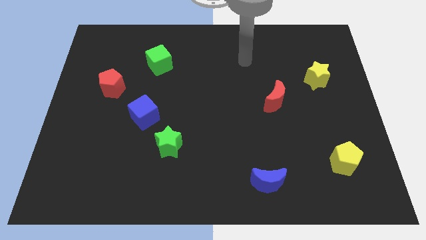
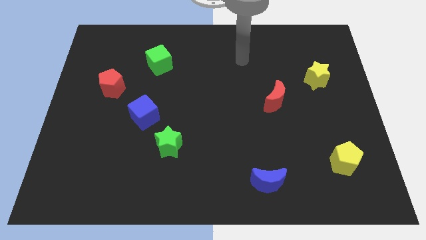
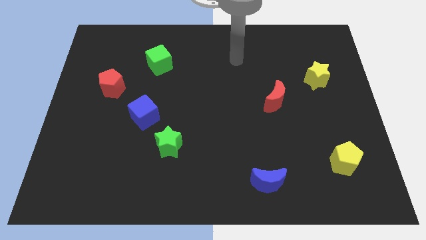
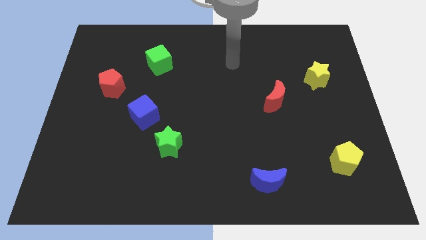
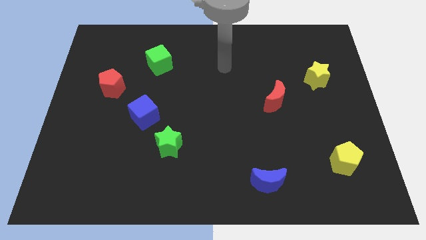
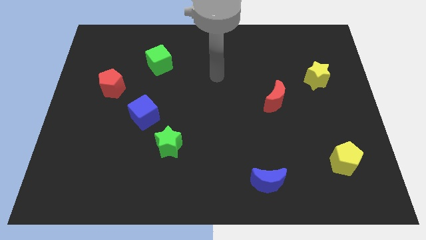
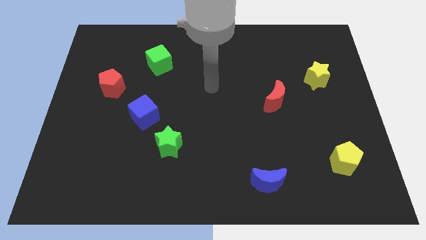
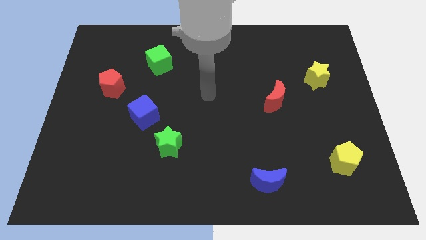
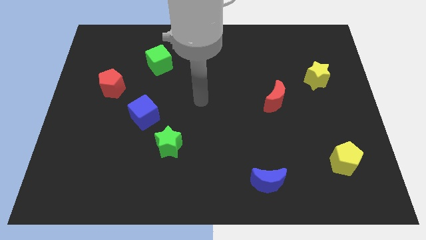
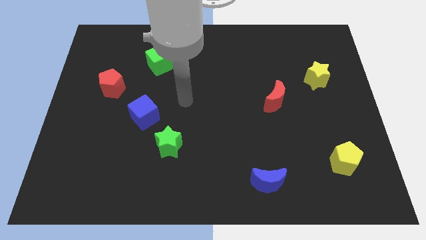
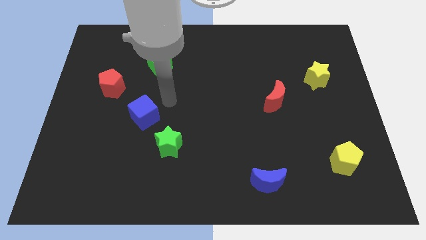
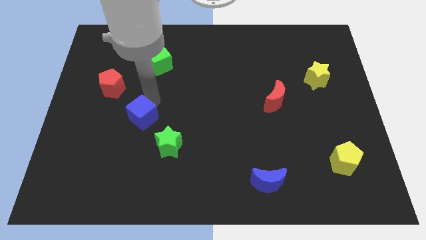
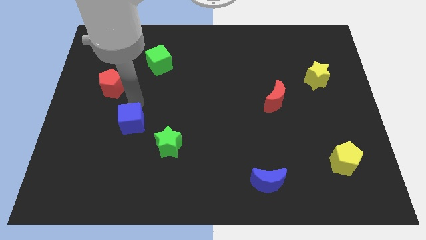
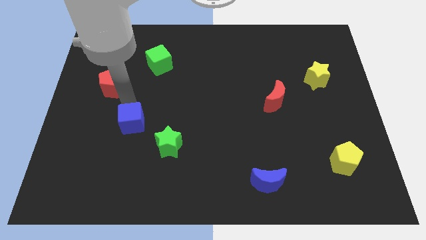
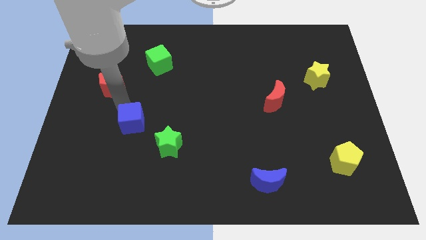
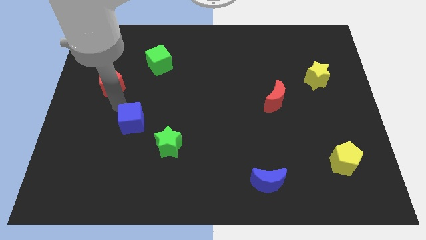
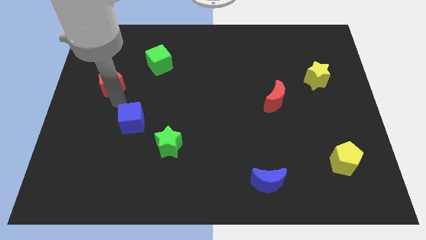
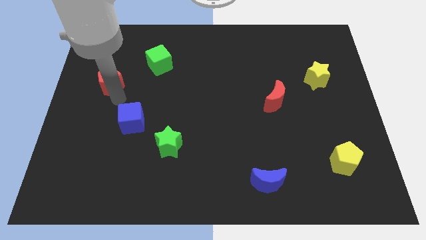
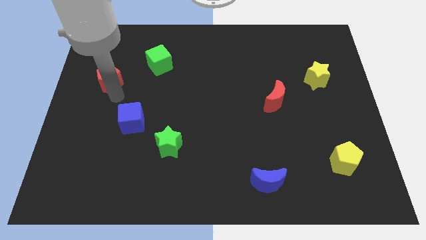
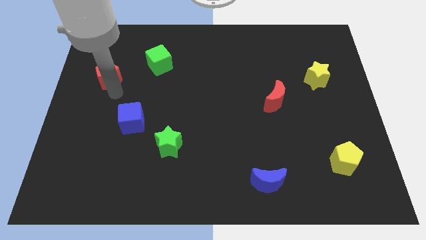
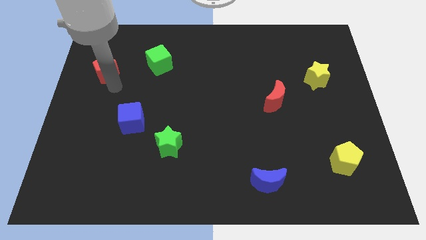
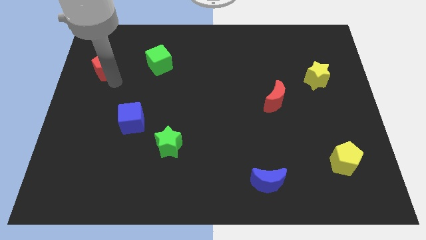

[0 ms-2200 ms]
push the red pentagon to the top

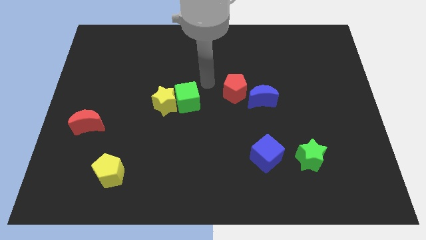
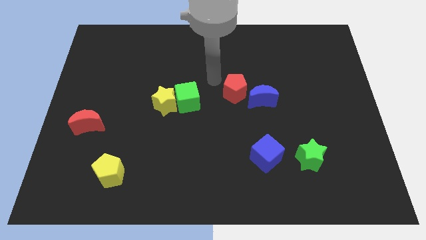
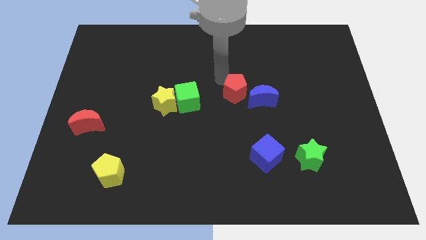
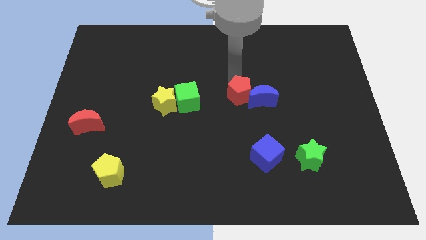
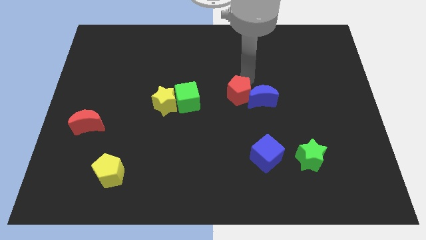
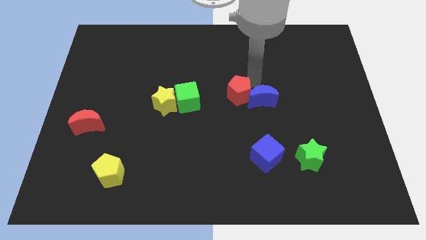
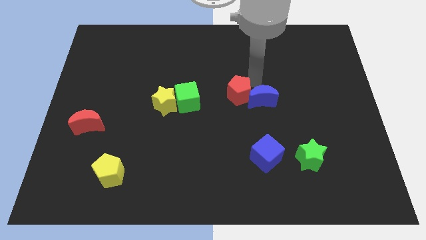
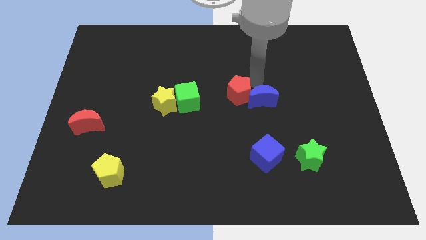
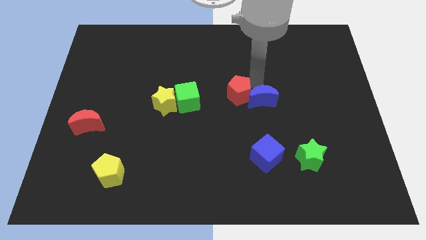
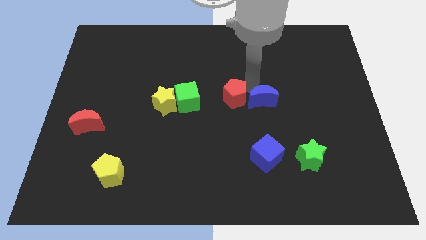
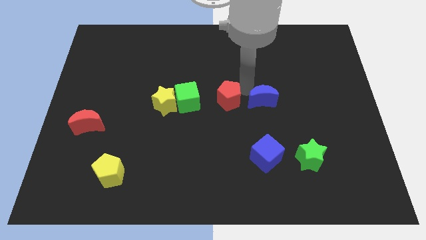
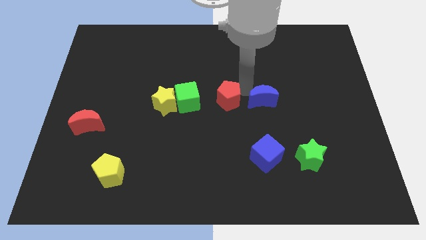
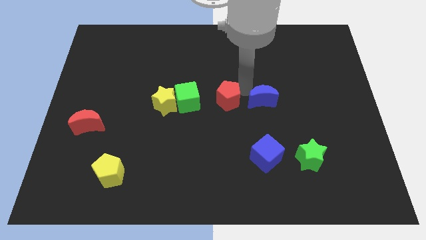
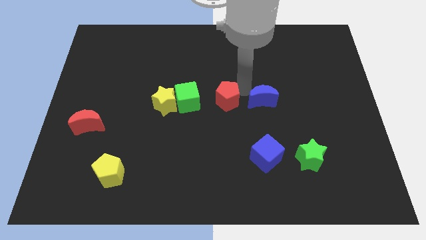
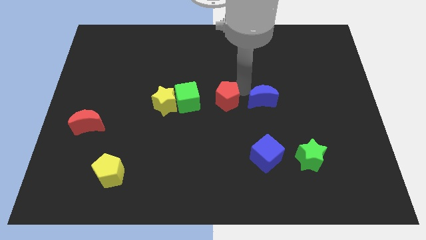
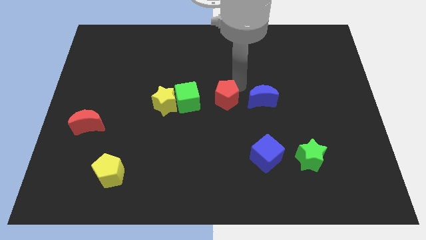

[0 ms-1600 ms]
place the red pentagon in between blue moon and green cube

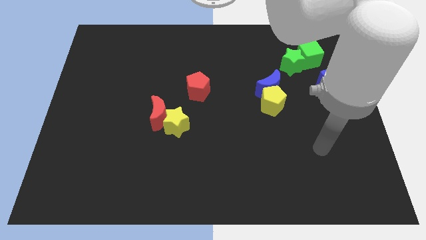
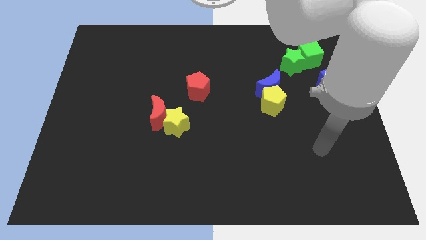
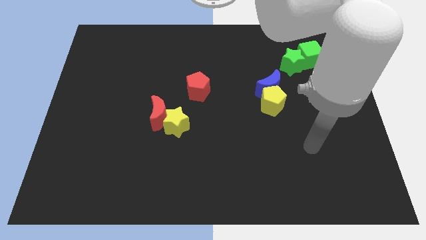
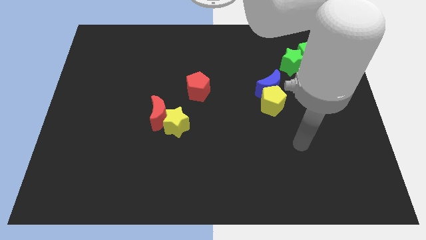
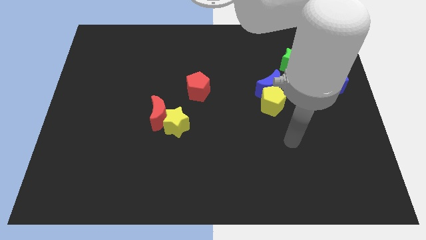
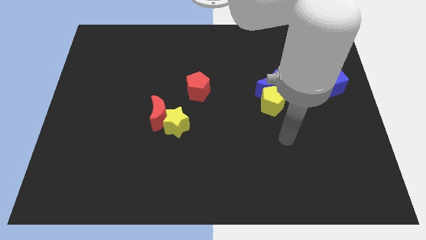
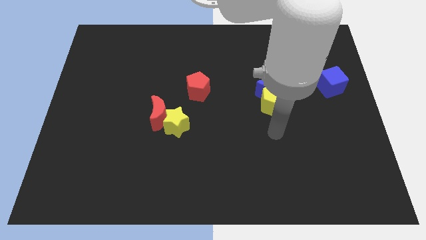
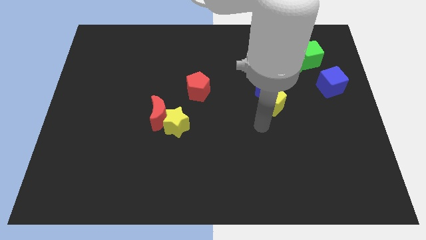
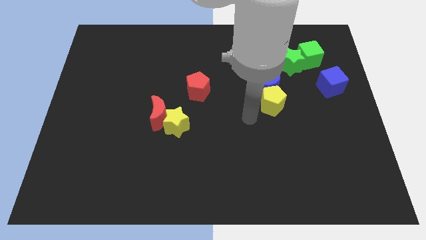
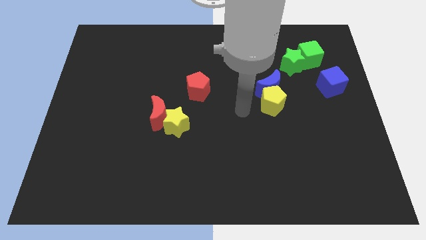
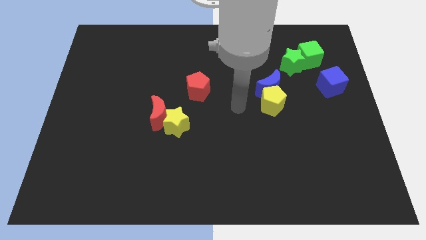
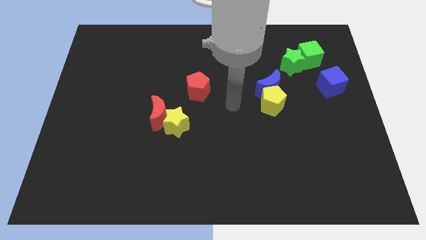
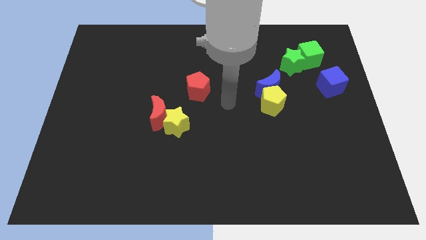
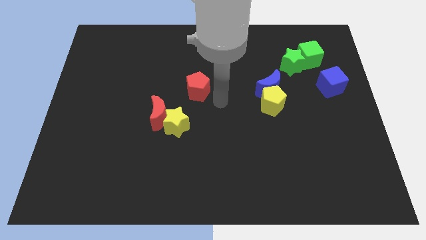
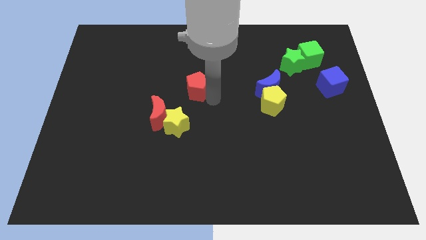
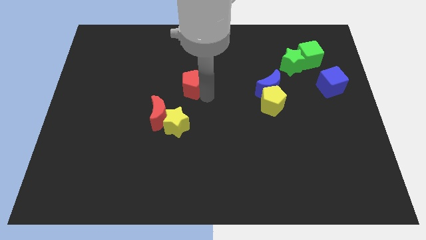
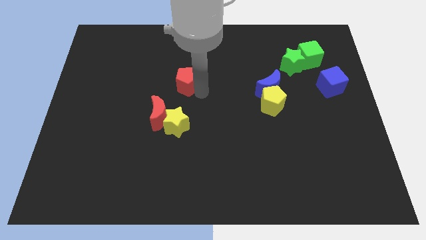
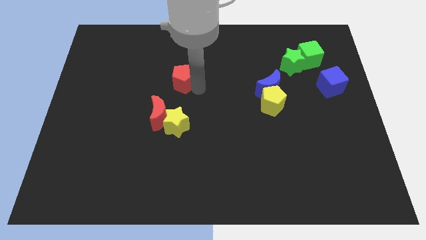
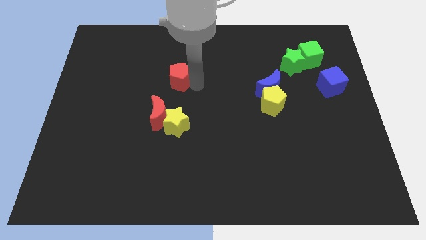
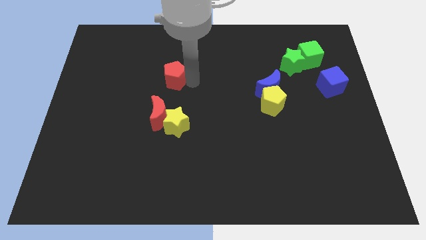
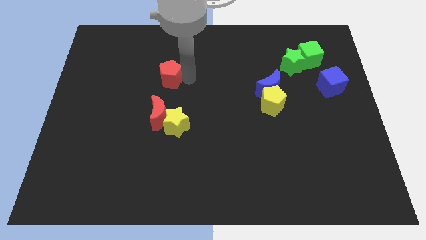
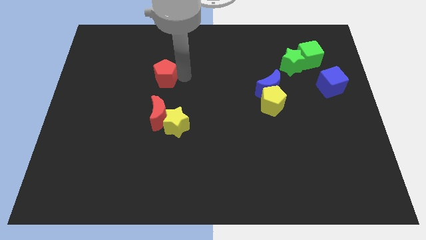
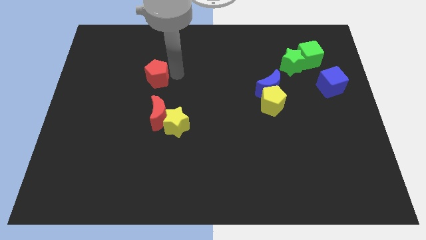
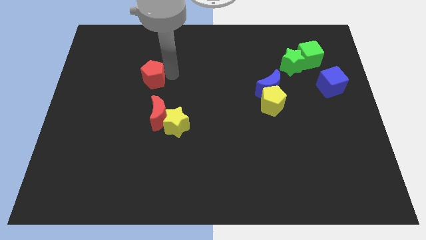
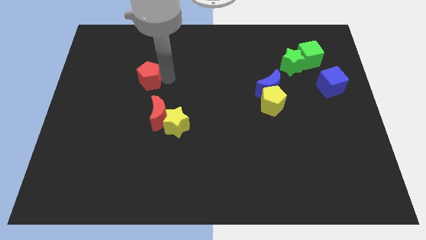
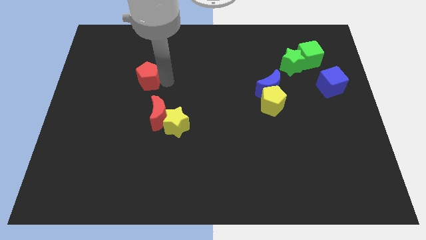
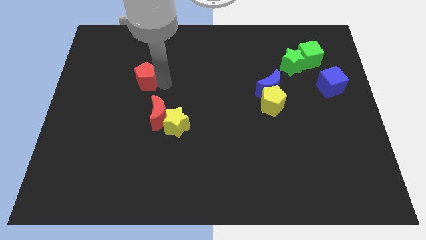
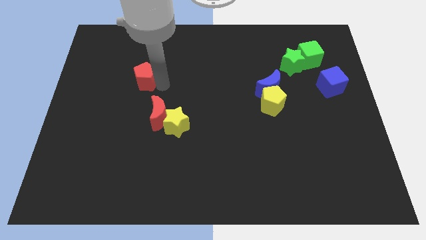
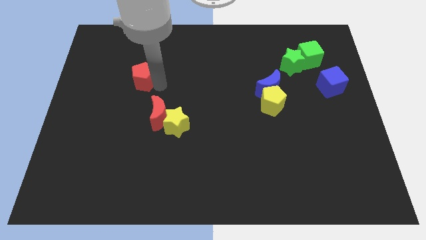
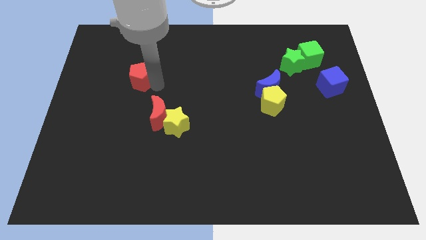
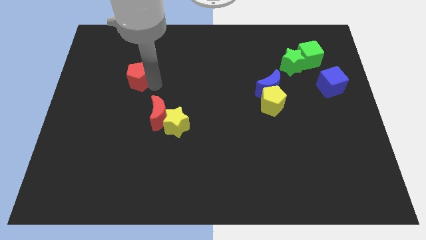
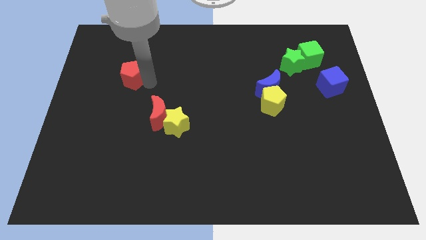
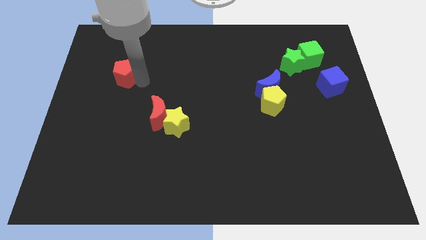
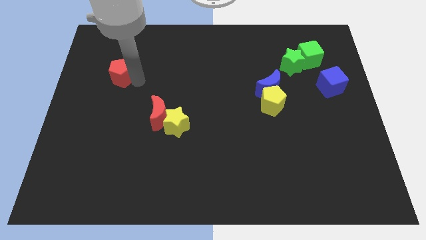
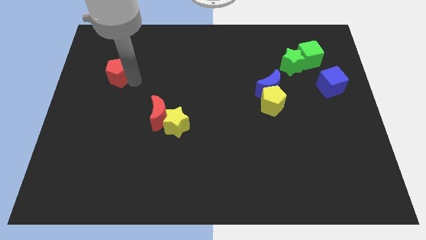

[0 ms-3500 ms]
move the red pentagon towards the left corner of the board

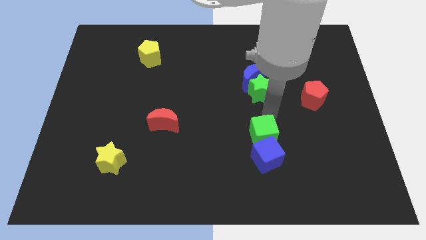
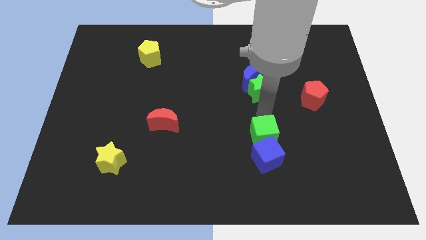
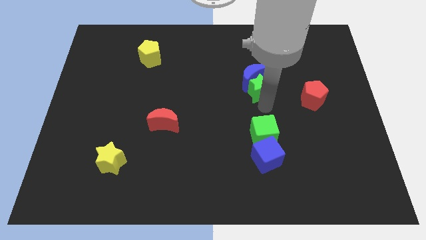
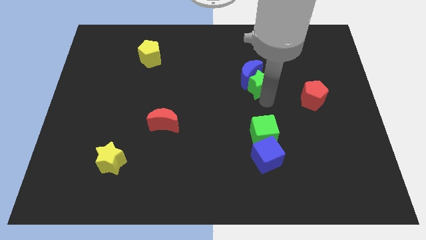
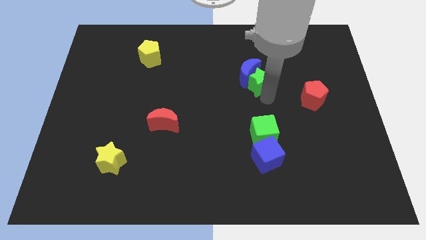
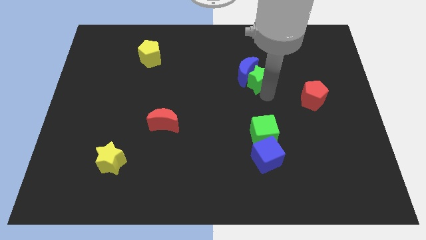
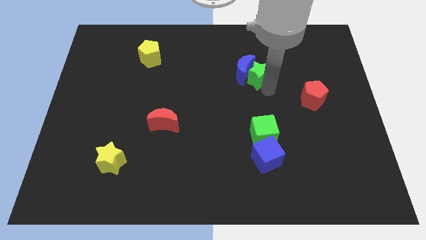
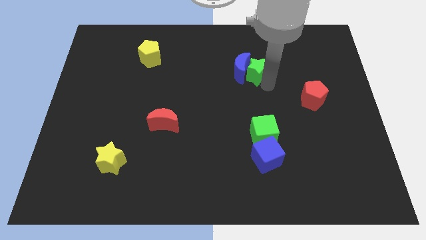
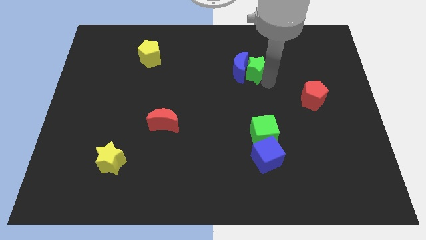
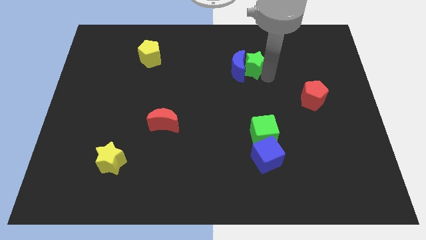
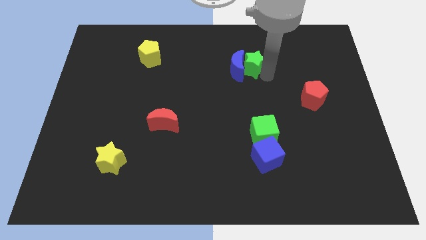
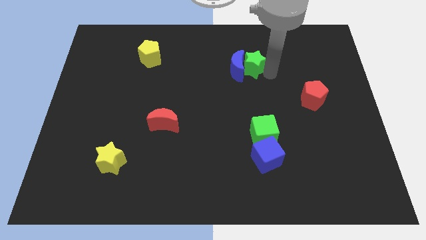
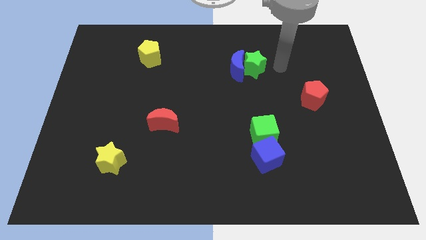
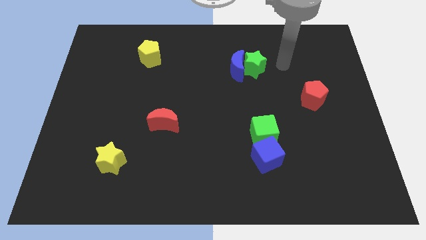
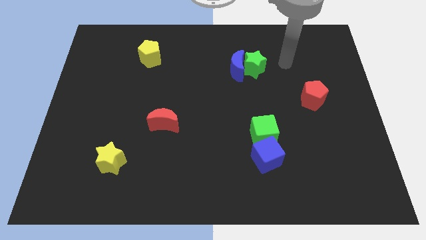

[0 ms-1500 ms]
push the blue crescent with the green star towards the top

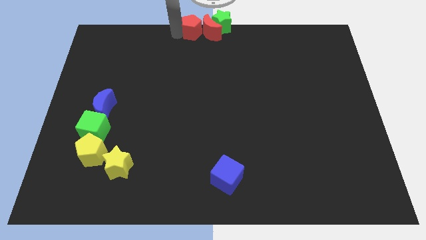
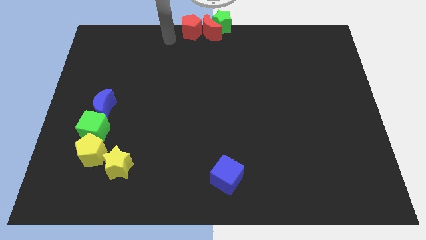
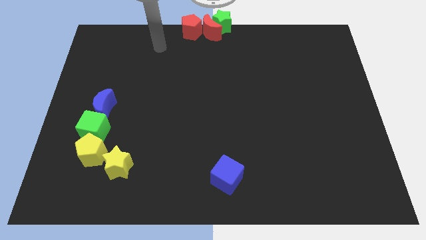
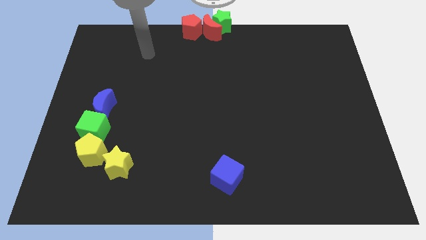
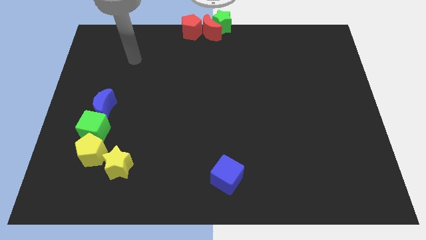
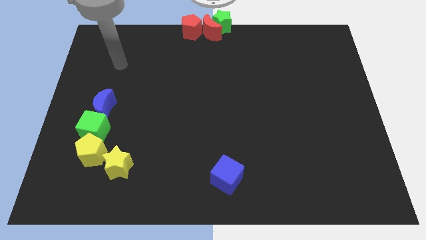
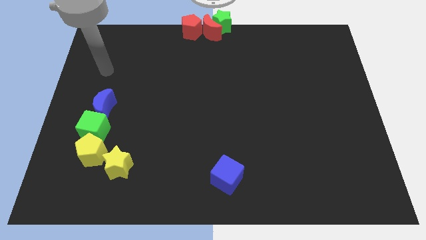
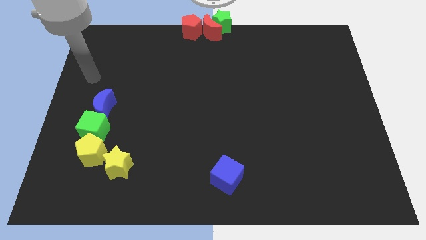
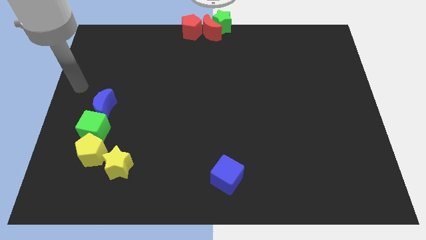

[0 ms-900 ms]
move the arm away from the red pentagon
